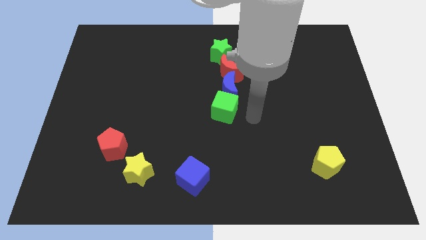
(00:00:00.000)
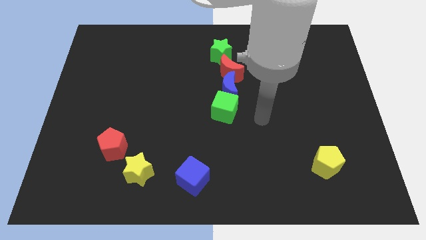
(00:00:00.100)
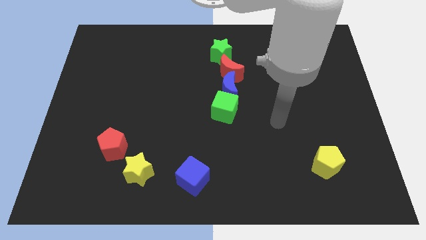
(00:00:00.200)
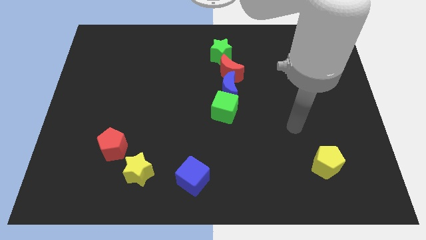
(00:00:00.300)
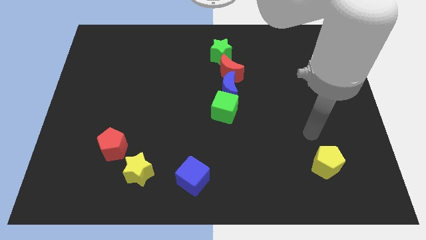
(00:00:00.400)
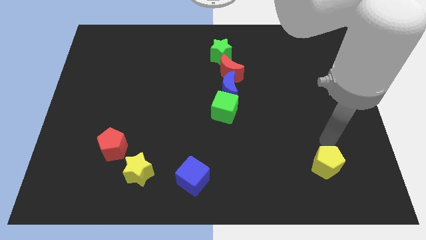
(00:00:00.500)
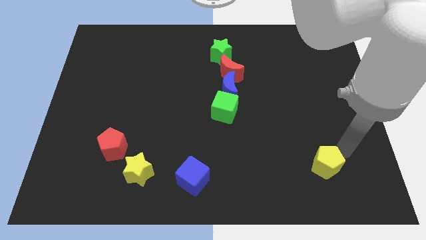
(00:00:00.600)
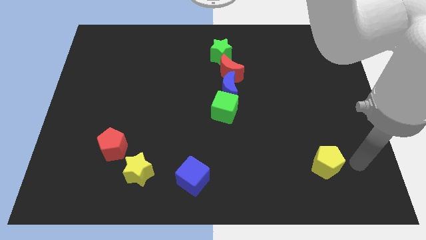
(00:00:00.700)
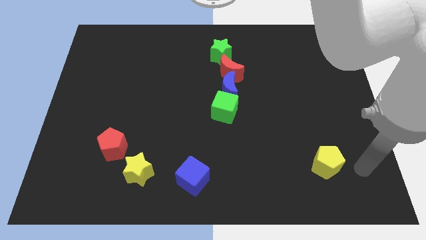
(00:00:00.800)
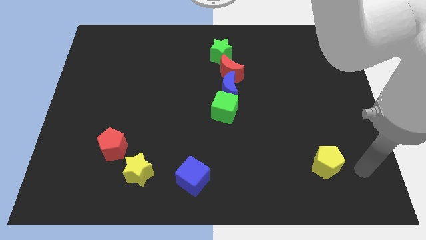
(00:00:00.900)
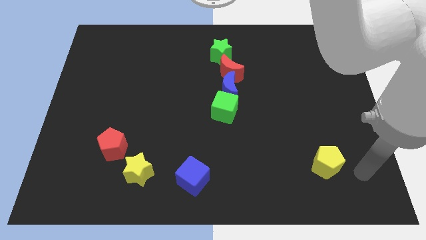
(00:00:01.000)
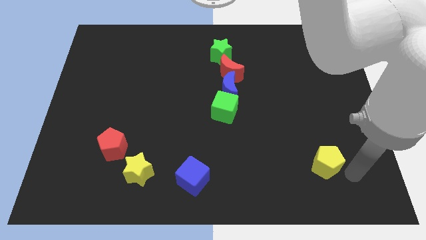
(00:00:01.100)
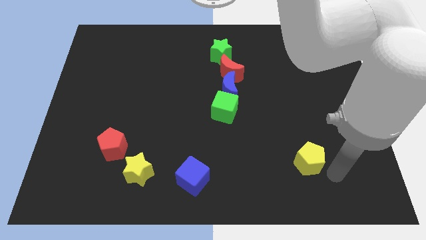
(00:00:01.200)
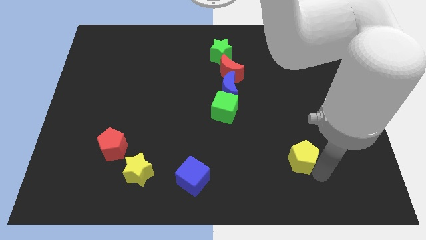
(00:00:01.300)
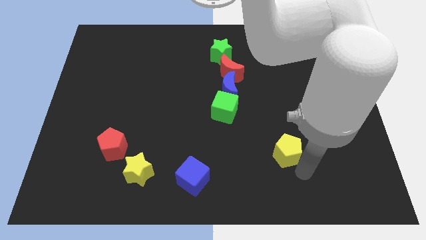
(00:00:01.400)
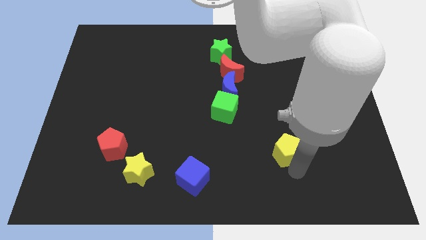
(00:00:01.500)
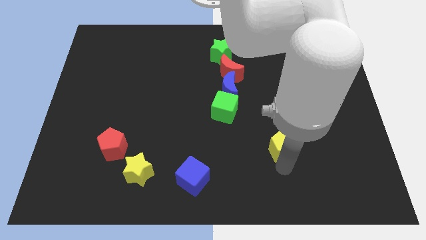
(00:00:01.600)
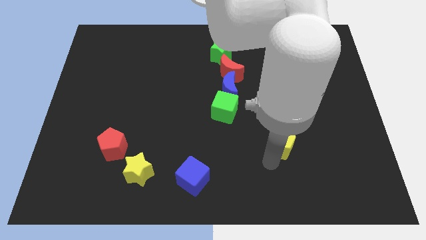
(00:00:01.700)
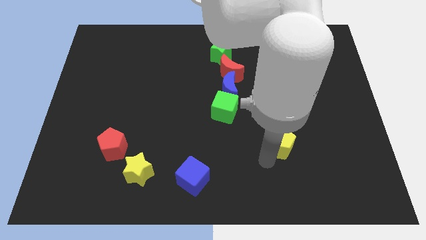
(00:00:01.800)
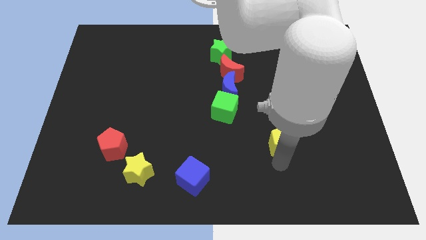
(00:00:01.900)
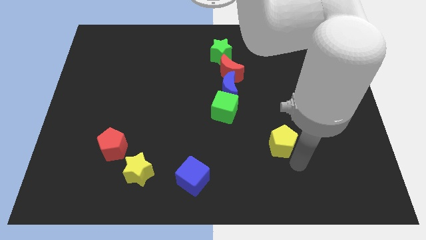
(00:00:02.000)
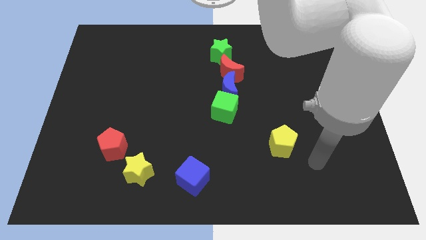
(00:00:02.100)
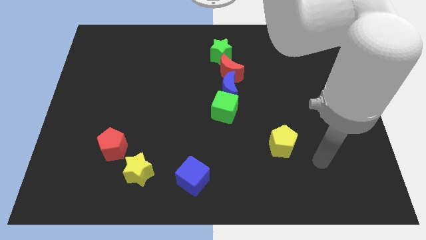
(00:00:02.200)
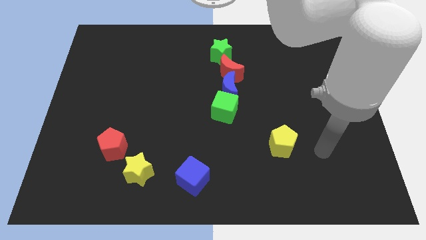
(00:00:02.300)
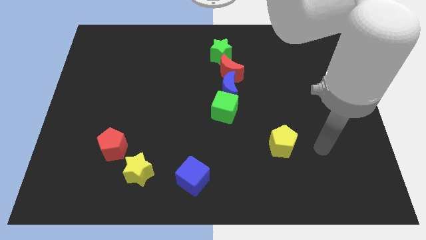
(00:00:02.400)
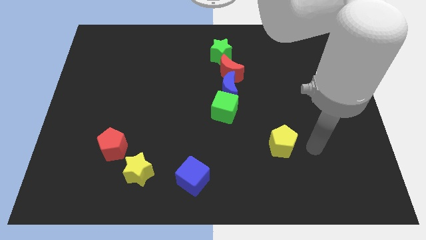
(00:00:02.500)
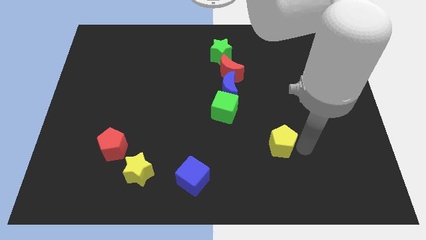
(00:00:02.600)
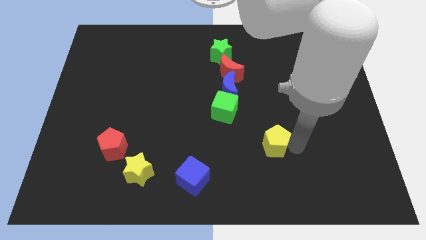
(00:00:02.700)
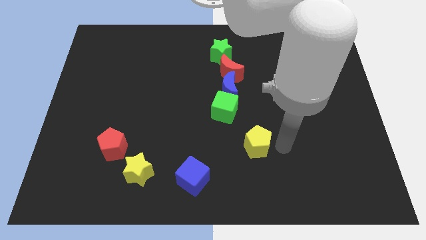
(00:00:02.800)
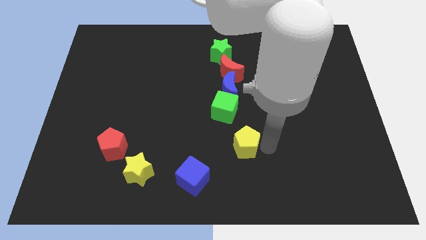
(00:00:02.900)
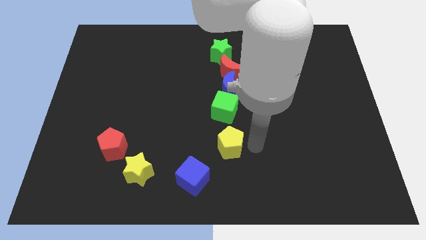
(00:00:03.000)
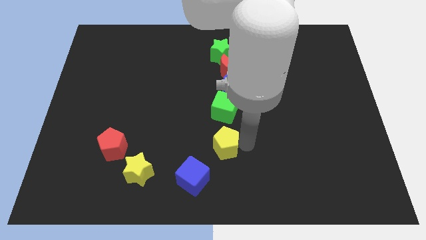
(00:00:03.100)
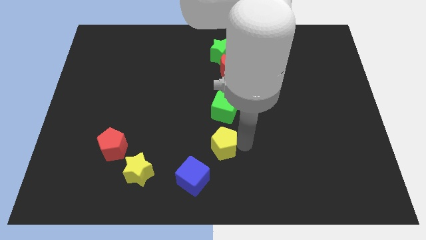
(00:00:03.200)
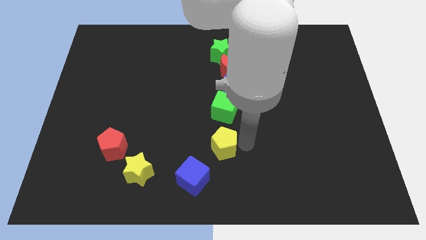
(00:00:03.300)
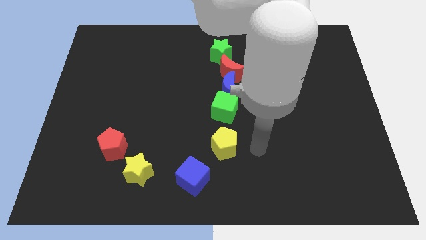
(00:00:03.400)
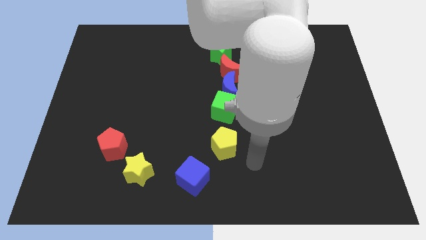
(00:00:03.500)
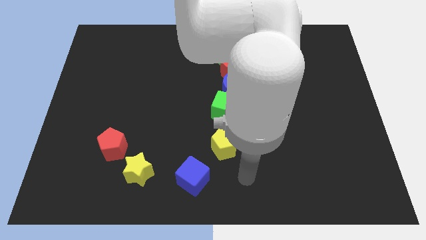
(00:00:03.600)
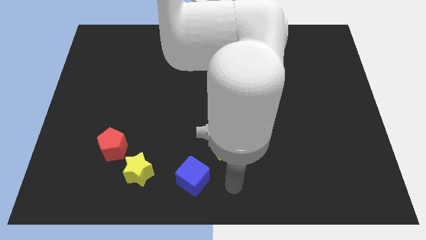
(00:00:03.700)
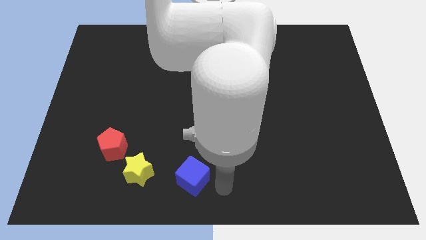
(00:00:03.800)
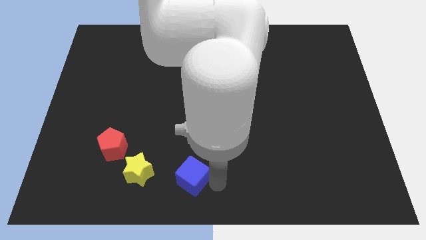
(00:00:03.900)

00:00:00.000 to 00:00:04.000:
place the yellow pentagon below the green cube

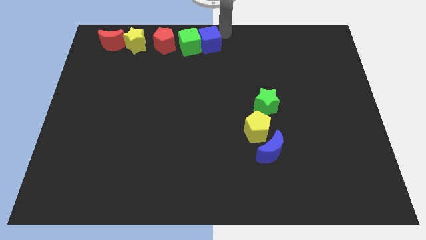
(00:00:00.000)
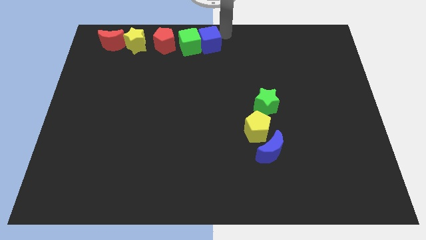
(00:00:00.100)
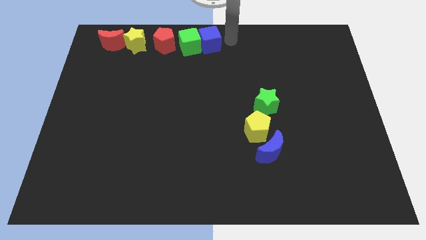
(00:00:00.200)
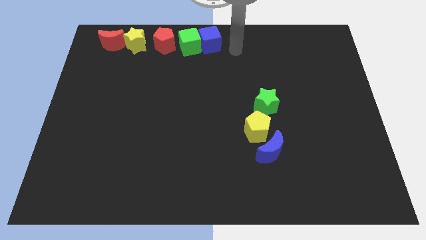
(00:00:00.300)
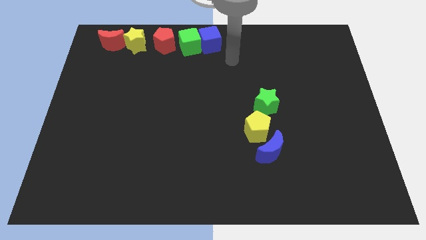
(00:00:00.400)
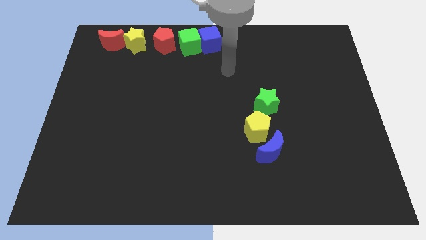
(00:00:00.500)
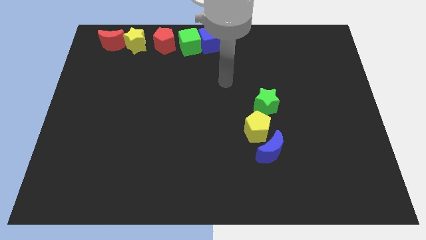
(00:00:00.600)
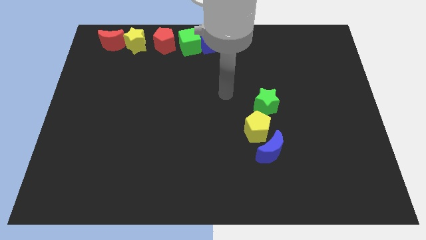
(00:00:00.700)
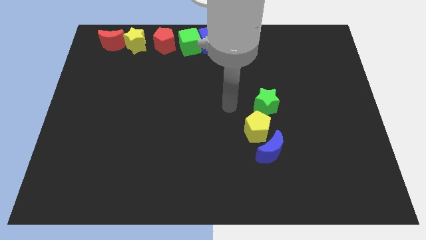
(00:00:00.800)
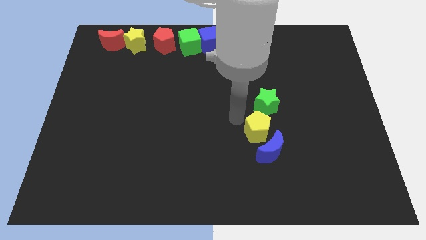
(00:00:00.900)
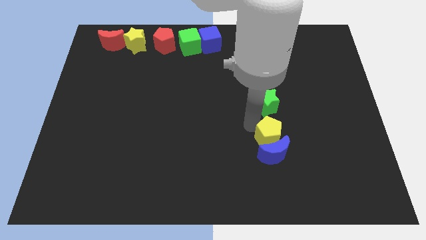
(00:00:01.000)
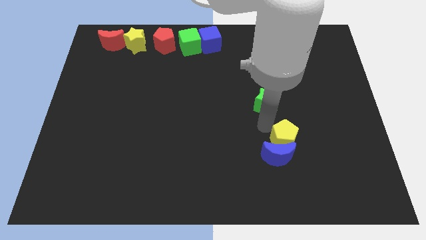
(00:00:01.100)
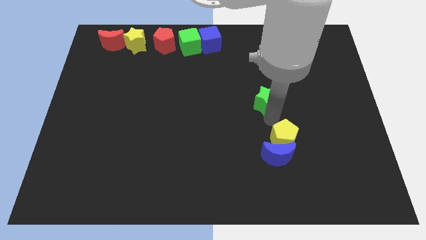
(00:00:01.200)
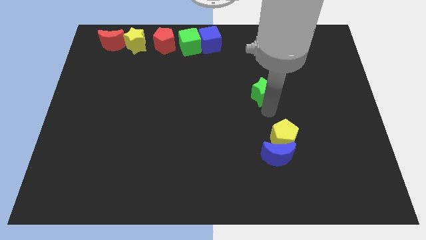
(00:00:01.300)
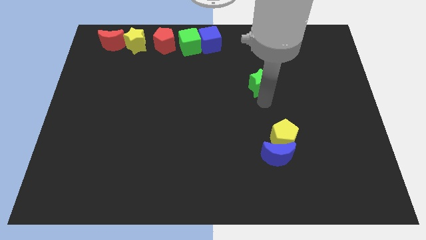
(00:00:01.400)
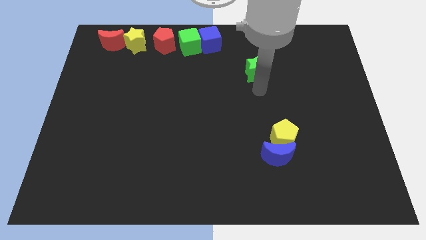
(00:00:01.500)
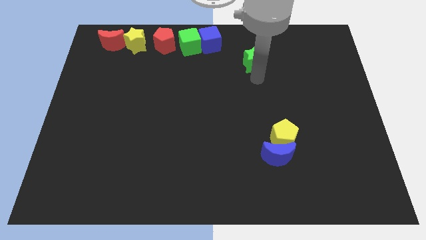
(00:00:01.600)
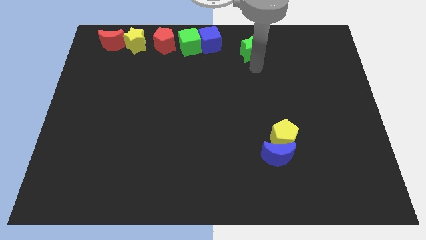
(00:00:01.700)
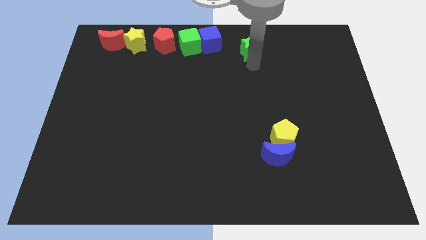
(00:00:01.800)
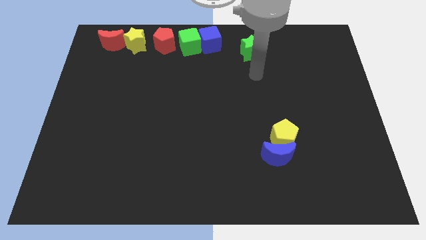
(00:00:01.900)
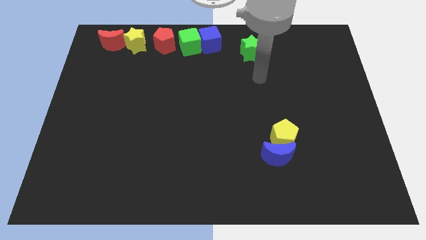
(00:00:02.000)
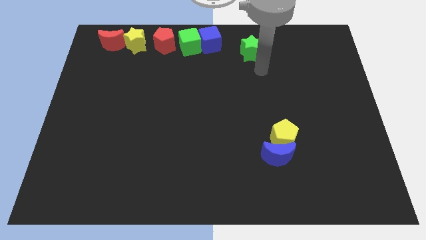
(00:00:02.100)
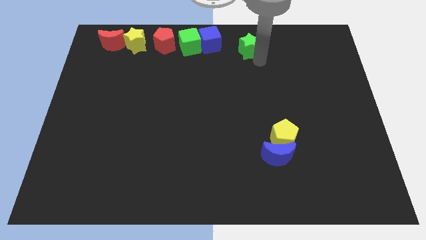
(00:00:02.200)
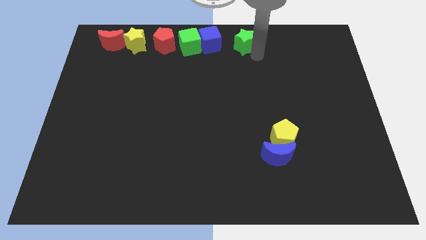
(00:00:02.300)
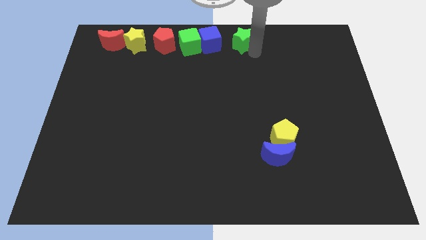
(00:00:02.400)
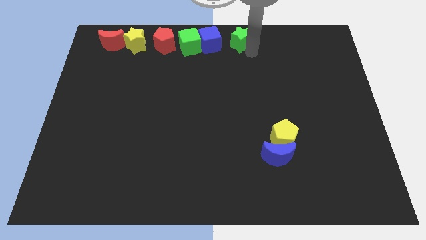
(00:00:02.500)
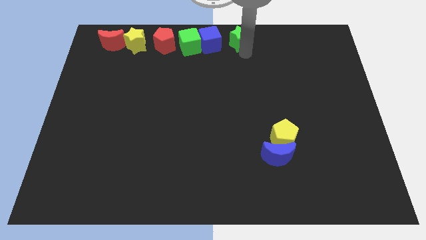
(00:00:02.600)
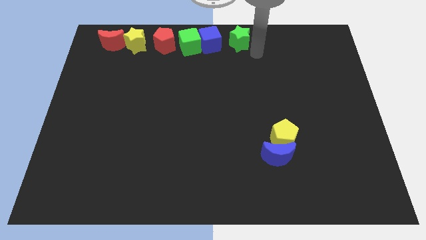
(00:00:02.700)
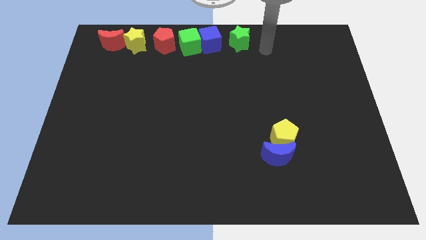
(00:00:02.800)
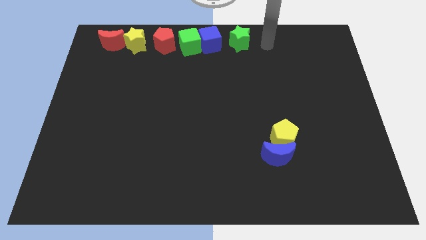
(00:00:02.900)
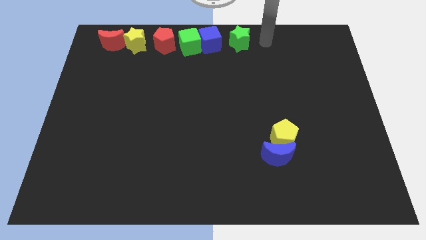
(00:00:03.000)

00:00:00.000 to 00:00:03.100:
place green star to the right of blue cube

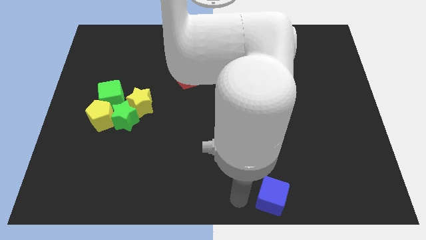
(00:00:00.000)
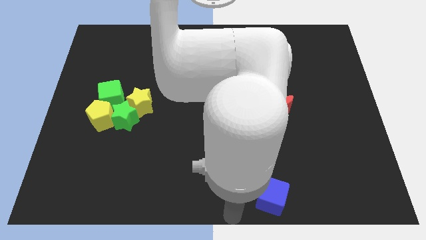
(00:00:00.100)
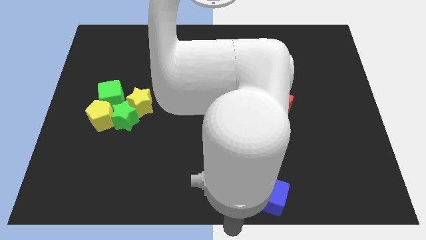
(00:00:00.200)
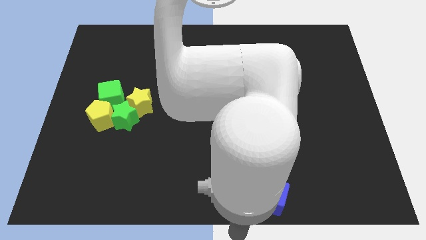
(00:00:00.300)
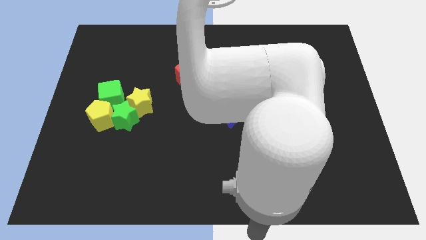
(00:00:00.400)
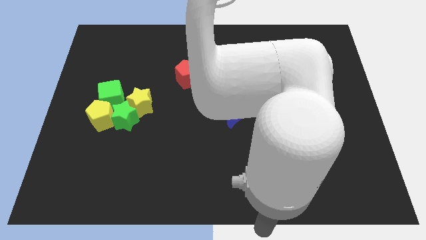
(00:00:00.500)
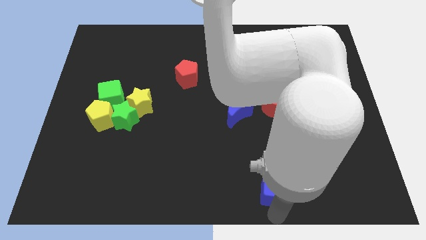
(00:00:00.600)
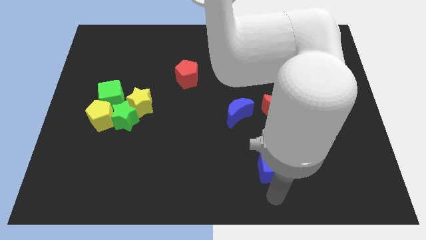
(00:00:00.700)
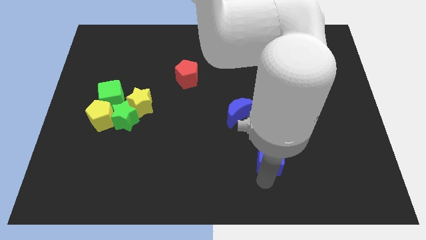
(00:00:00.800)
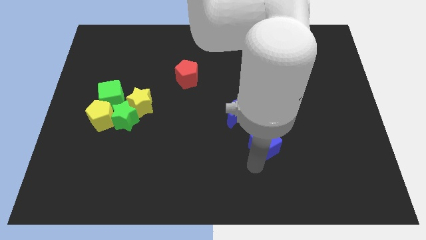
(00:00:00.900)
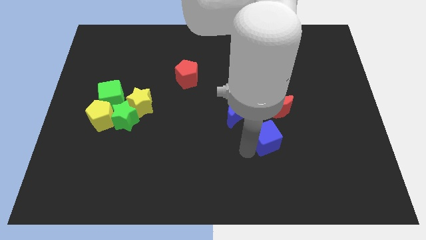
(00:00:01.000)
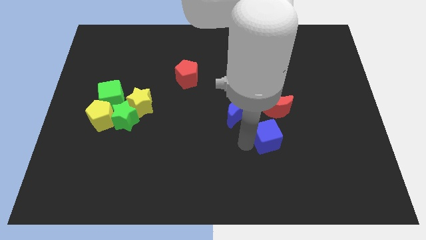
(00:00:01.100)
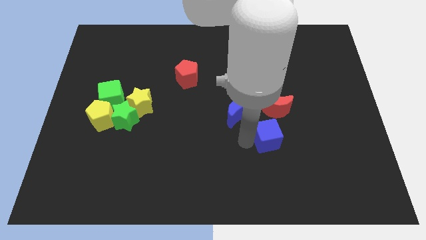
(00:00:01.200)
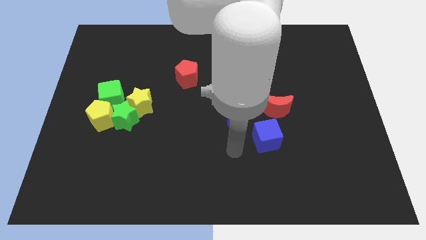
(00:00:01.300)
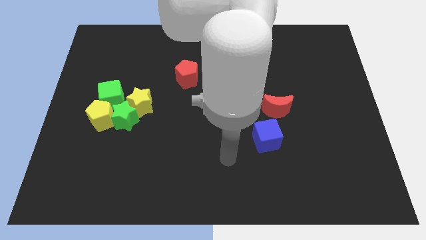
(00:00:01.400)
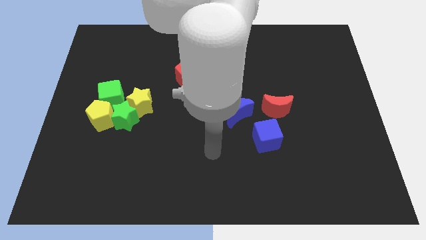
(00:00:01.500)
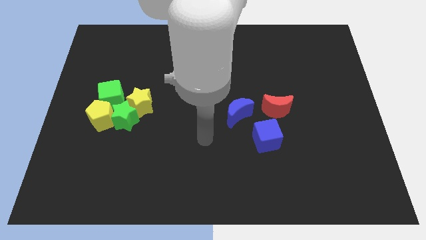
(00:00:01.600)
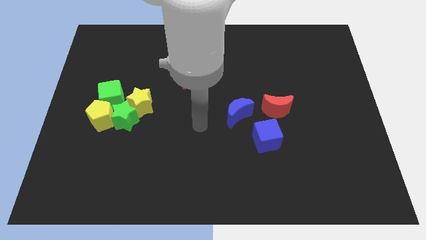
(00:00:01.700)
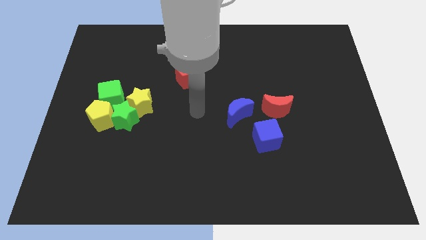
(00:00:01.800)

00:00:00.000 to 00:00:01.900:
push the blue cube towards top side
